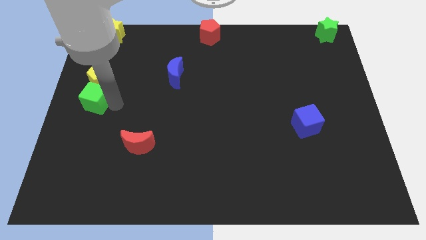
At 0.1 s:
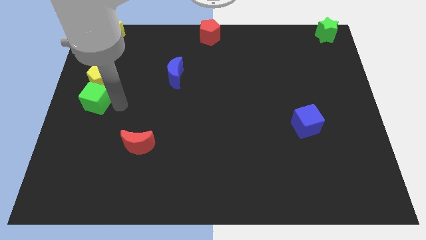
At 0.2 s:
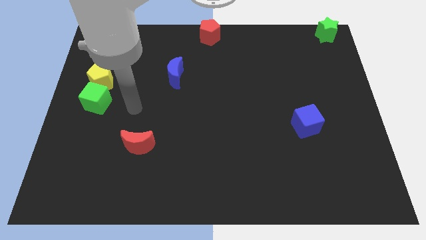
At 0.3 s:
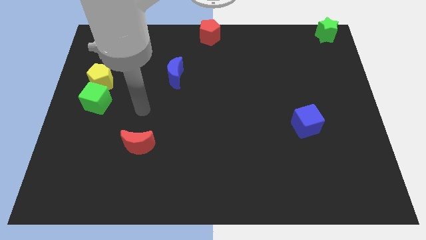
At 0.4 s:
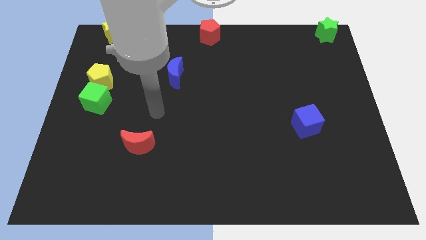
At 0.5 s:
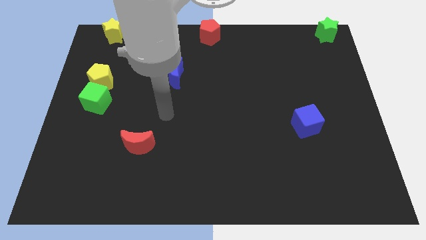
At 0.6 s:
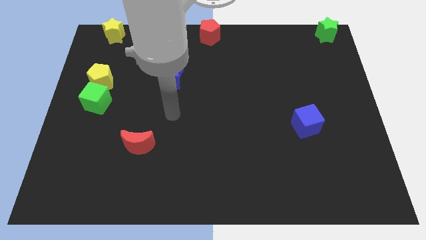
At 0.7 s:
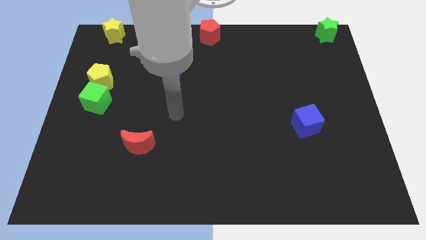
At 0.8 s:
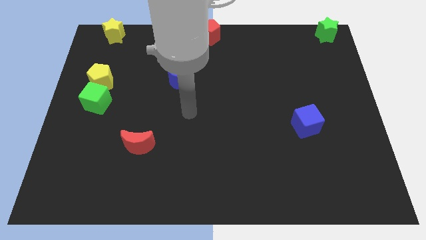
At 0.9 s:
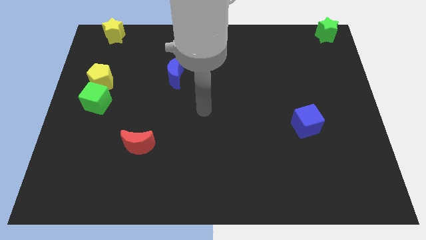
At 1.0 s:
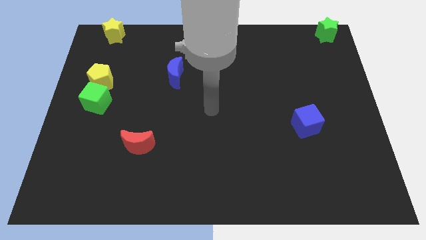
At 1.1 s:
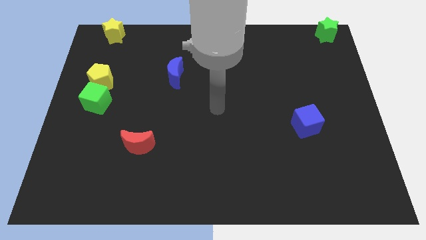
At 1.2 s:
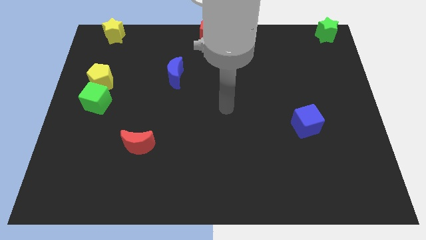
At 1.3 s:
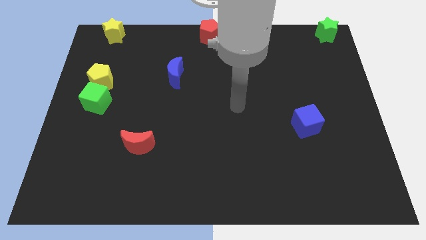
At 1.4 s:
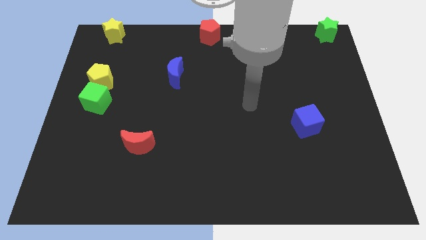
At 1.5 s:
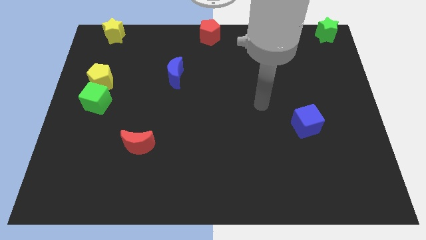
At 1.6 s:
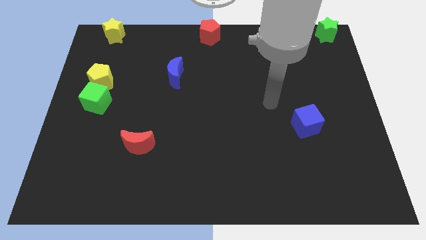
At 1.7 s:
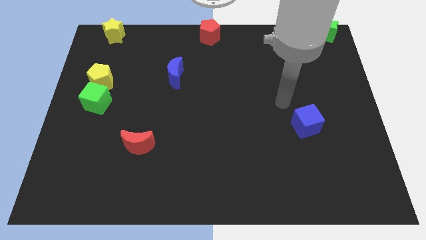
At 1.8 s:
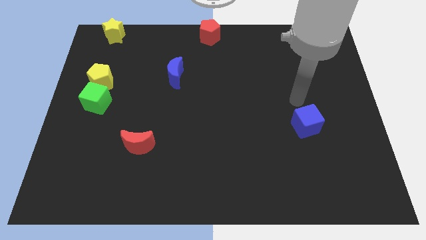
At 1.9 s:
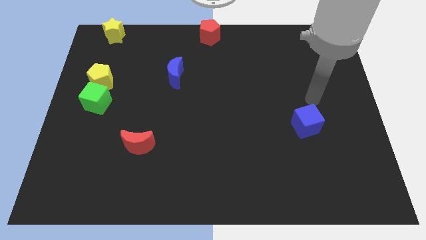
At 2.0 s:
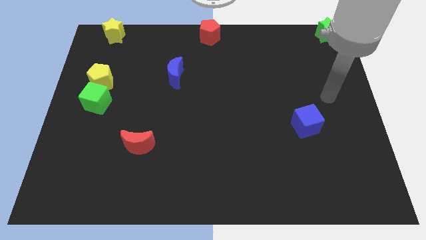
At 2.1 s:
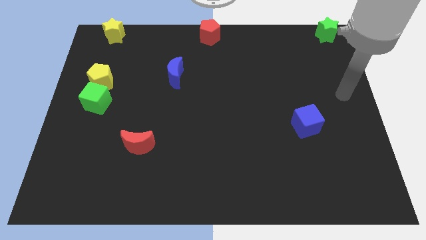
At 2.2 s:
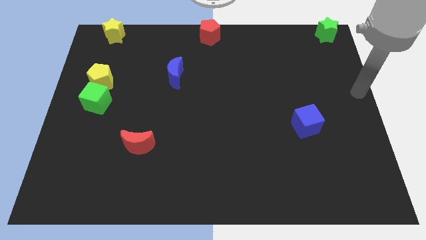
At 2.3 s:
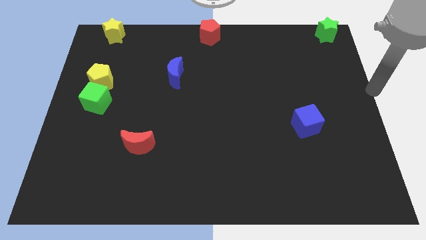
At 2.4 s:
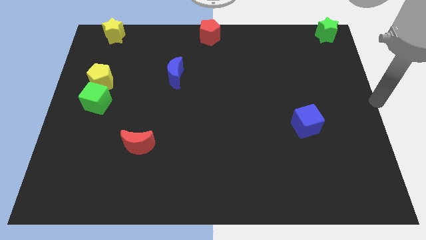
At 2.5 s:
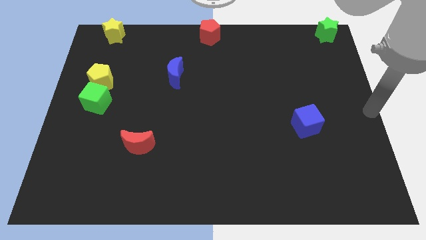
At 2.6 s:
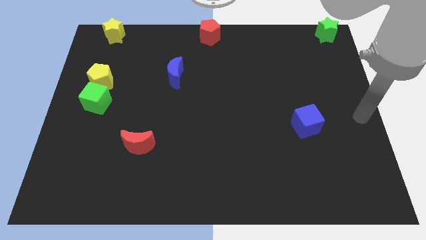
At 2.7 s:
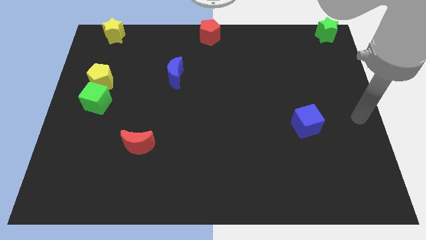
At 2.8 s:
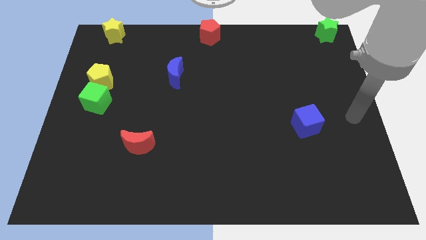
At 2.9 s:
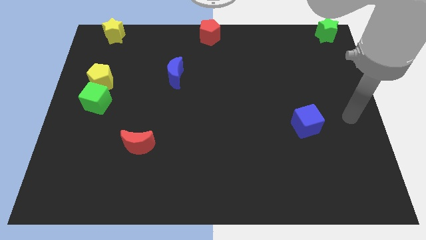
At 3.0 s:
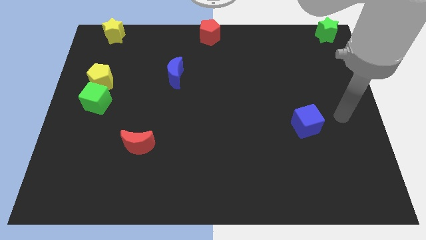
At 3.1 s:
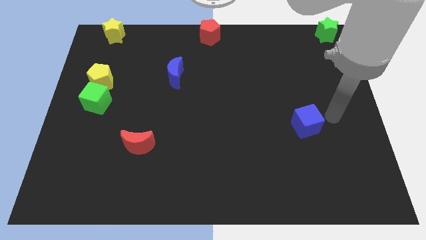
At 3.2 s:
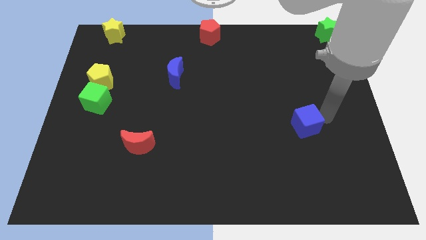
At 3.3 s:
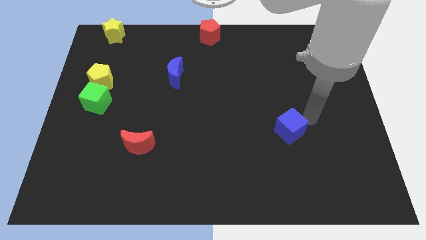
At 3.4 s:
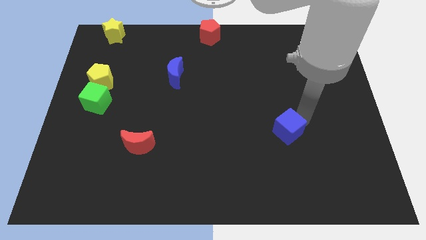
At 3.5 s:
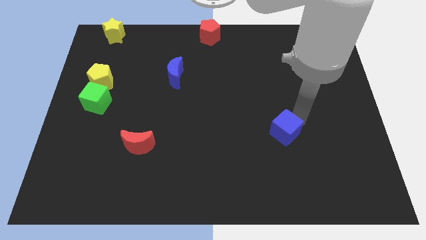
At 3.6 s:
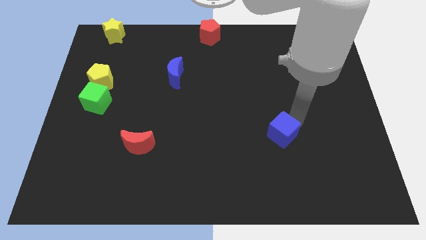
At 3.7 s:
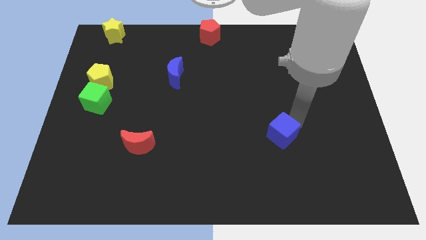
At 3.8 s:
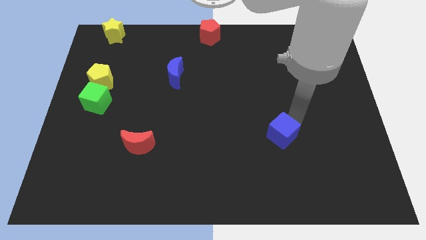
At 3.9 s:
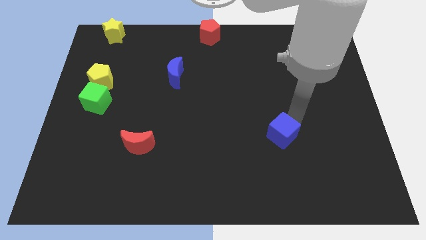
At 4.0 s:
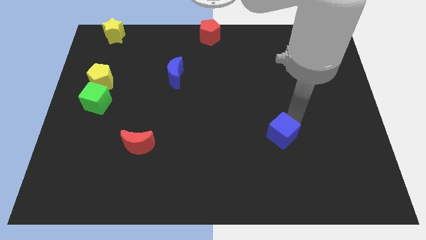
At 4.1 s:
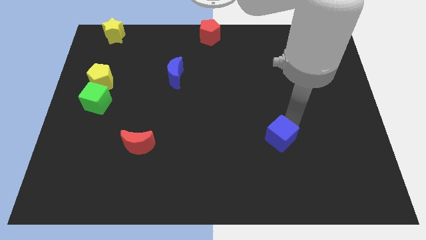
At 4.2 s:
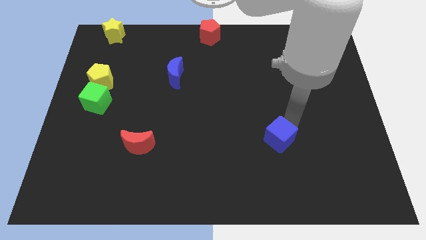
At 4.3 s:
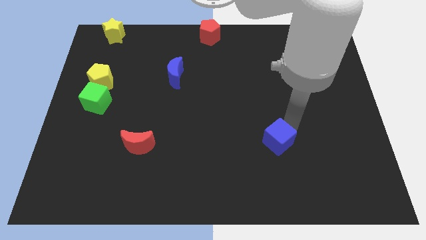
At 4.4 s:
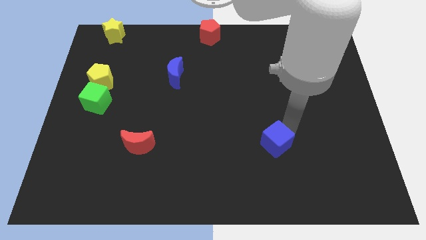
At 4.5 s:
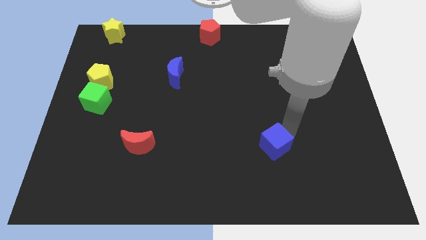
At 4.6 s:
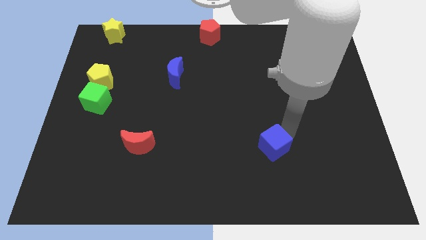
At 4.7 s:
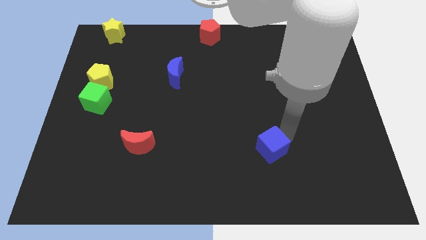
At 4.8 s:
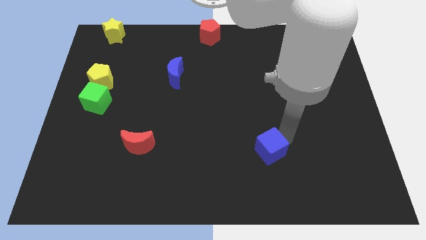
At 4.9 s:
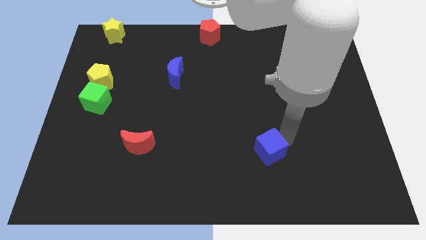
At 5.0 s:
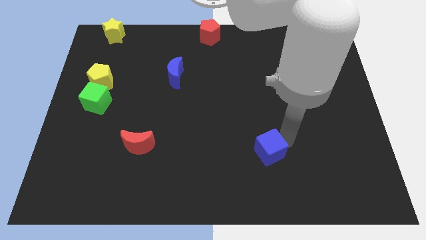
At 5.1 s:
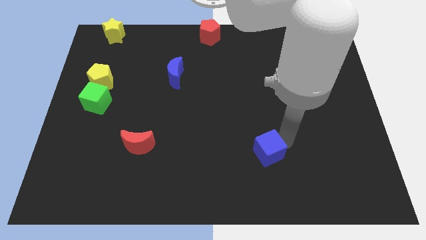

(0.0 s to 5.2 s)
push the blue cube to the bottom left

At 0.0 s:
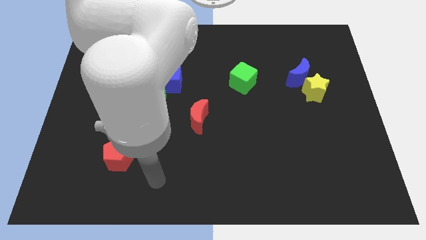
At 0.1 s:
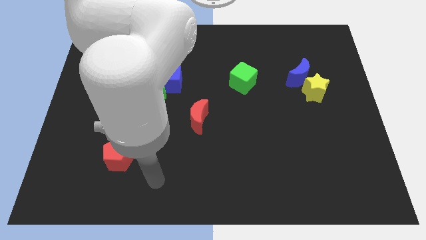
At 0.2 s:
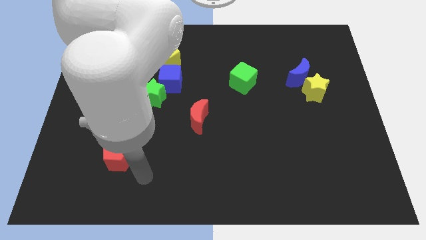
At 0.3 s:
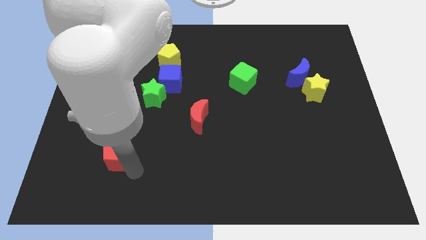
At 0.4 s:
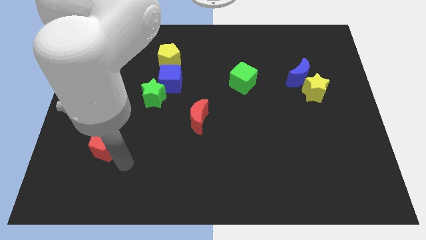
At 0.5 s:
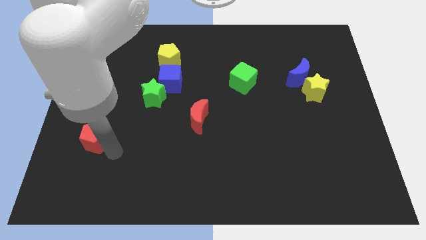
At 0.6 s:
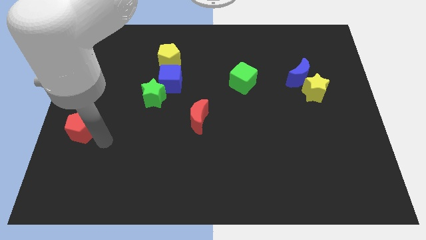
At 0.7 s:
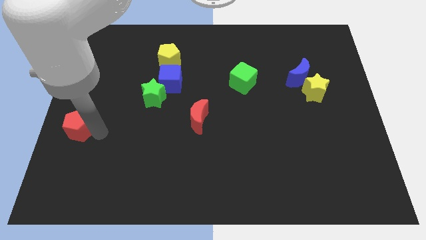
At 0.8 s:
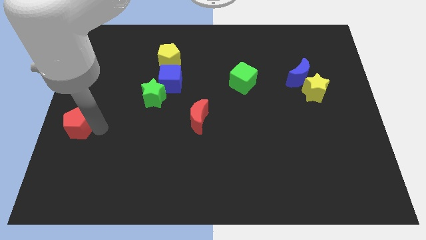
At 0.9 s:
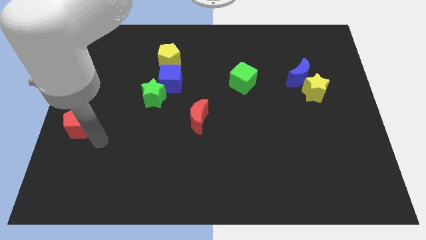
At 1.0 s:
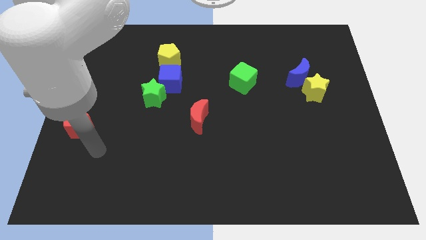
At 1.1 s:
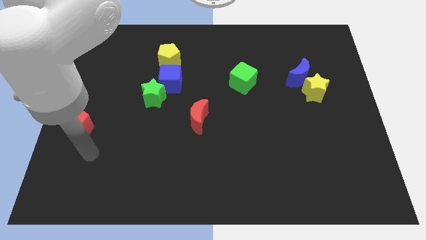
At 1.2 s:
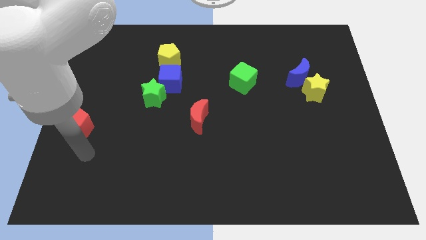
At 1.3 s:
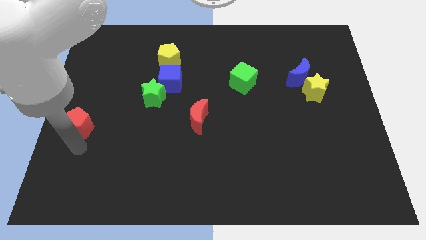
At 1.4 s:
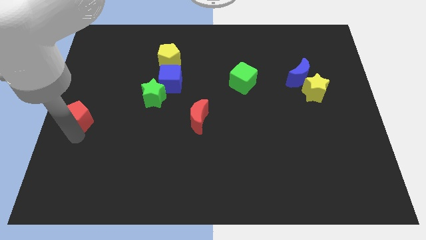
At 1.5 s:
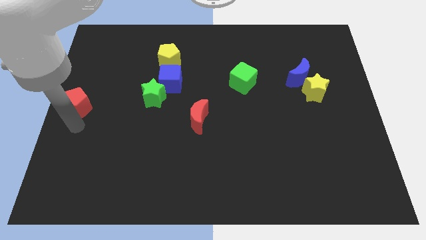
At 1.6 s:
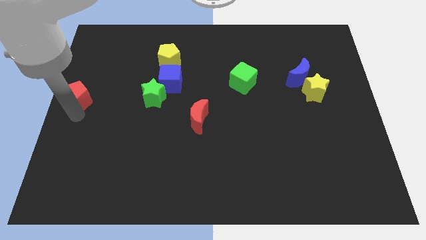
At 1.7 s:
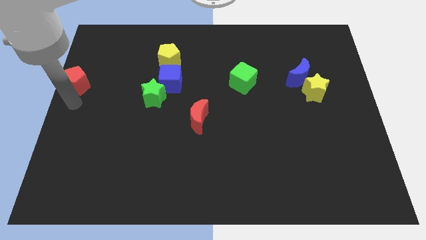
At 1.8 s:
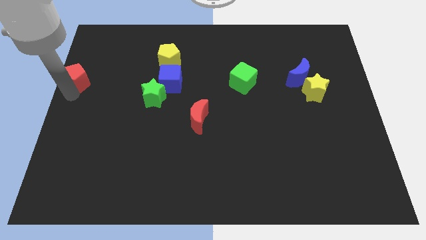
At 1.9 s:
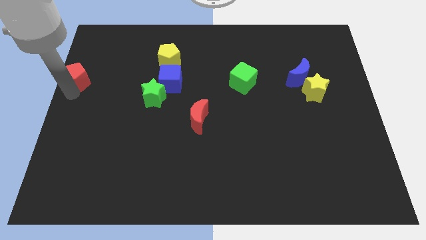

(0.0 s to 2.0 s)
place the red pentagon towards the left center of the board

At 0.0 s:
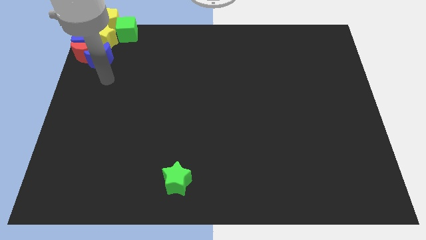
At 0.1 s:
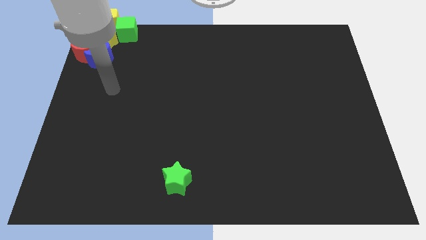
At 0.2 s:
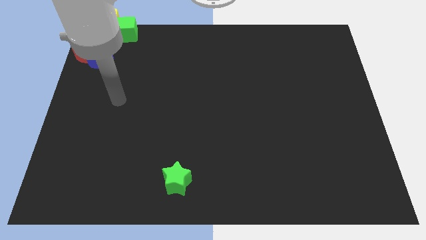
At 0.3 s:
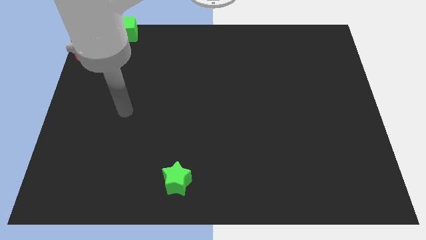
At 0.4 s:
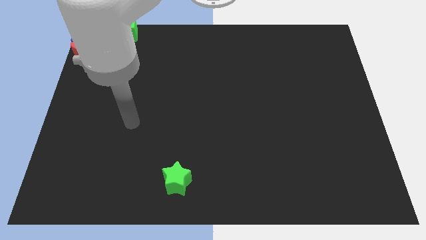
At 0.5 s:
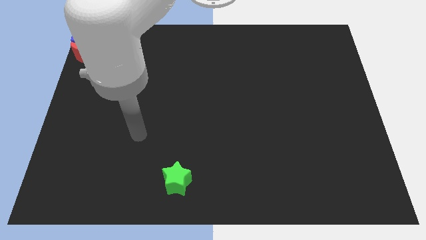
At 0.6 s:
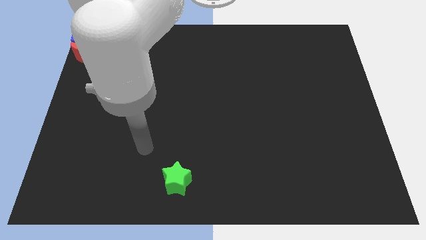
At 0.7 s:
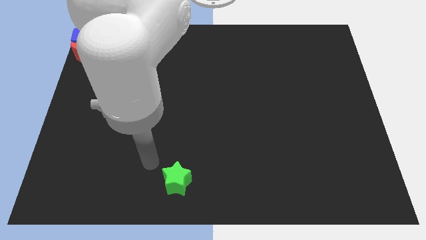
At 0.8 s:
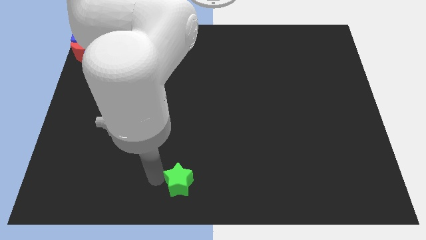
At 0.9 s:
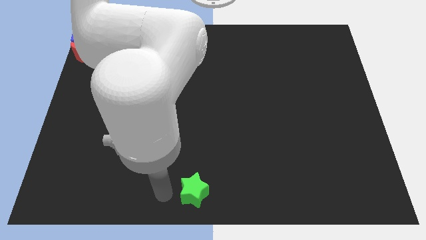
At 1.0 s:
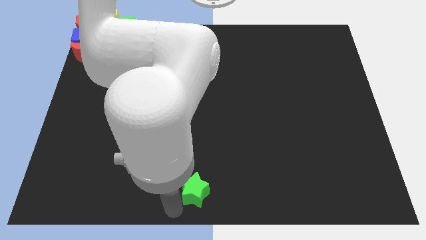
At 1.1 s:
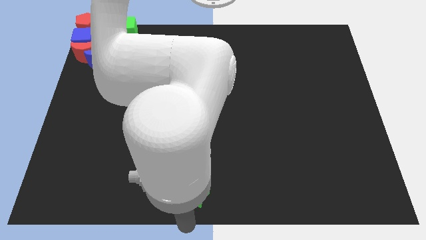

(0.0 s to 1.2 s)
slightly push the green star to the bottom center of the board

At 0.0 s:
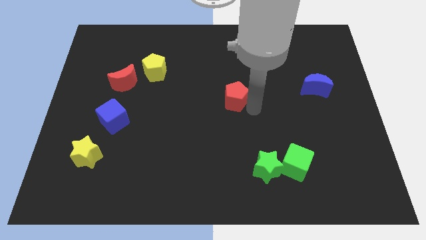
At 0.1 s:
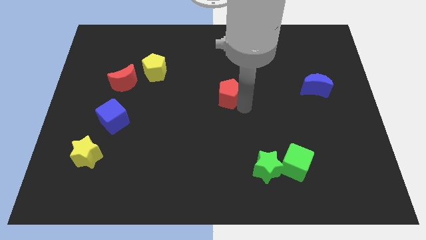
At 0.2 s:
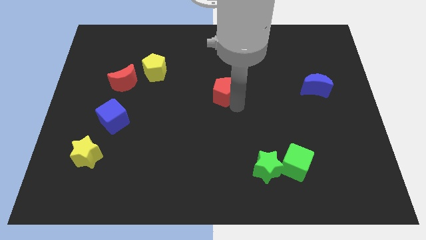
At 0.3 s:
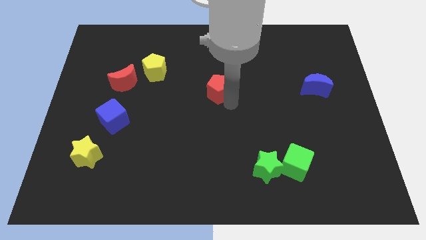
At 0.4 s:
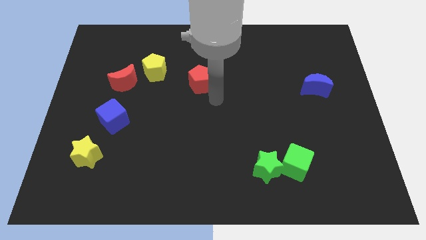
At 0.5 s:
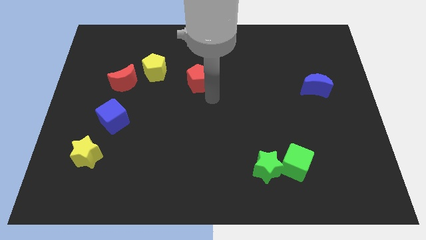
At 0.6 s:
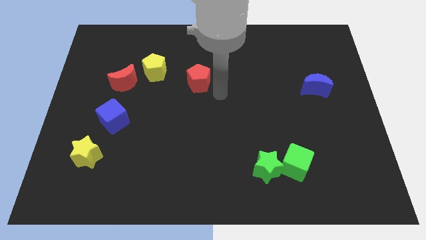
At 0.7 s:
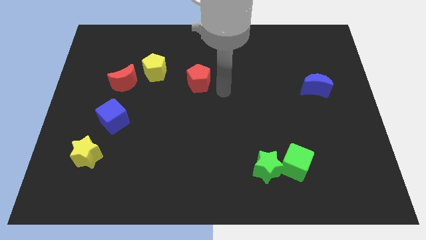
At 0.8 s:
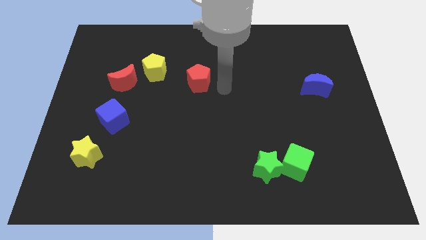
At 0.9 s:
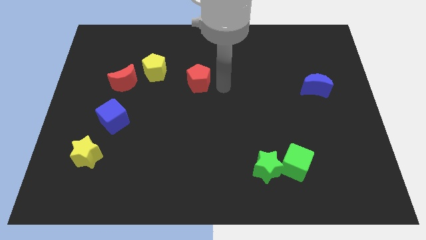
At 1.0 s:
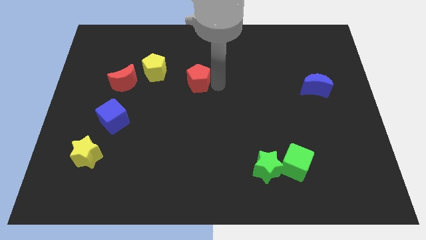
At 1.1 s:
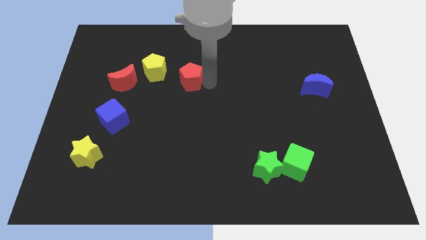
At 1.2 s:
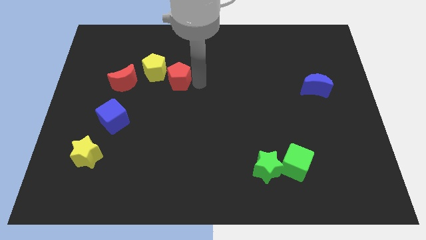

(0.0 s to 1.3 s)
slide red pentagon towards yellow pentagon
